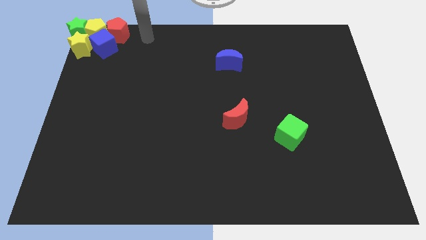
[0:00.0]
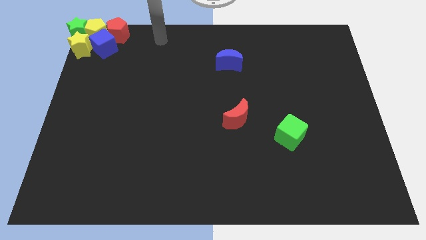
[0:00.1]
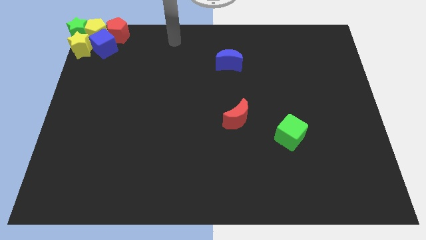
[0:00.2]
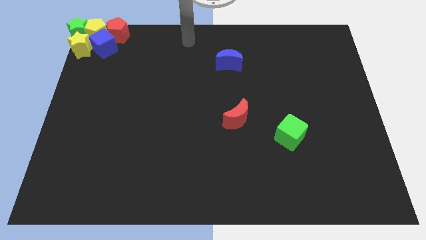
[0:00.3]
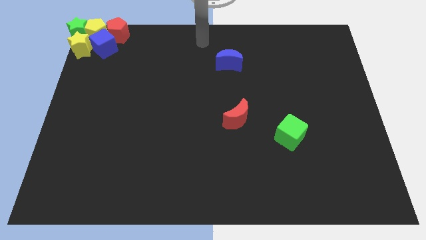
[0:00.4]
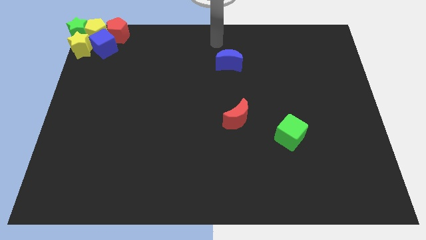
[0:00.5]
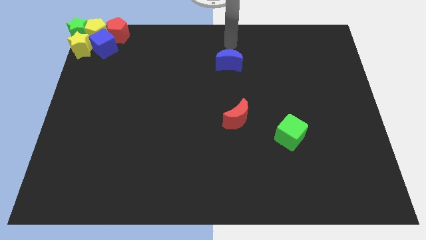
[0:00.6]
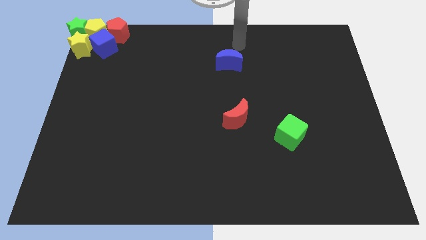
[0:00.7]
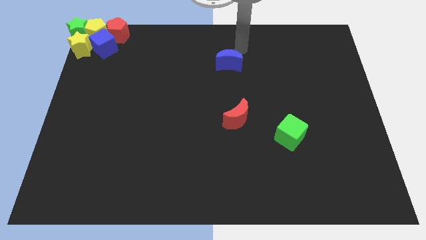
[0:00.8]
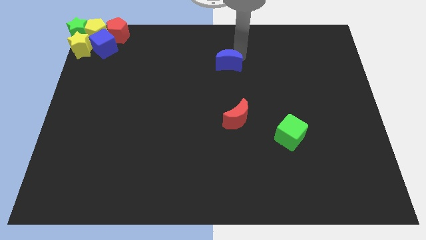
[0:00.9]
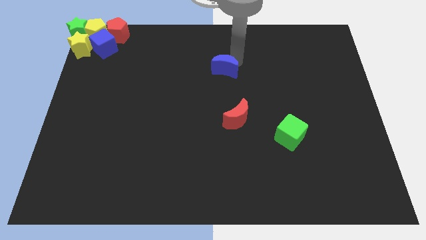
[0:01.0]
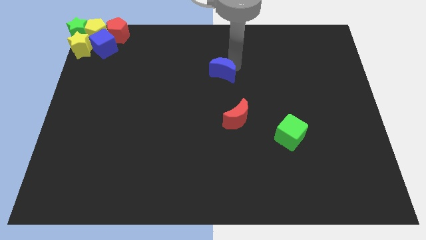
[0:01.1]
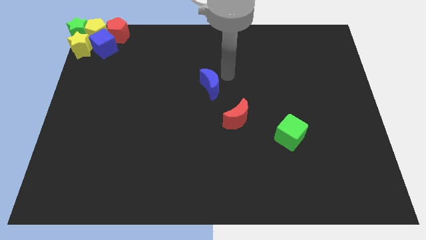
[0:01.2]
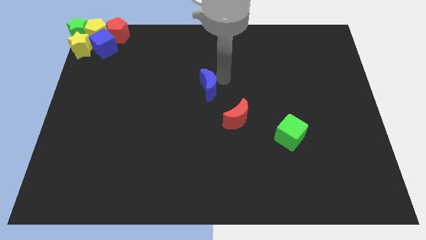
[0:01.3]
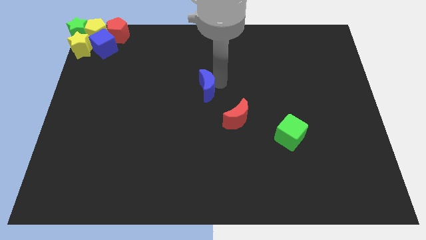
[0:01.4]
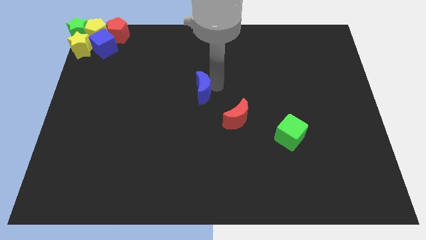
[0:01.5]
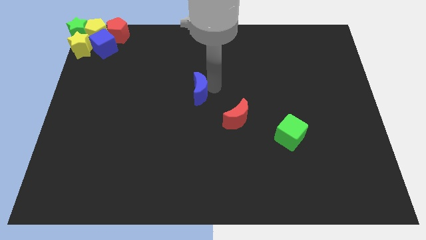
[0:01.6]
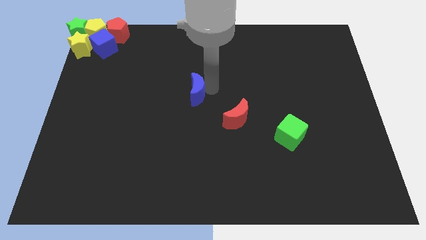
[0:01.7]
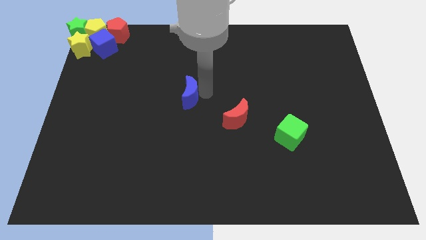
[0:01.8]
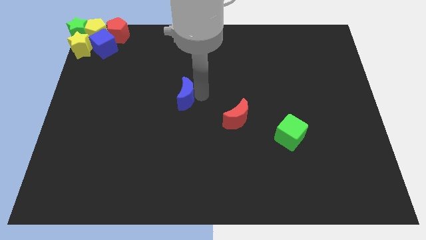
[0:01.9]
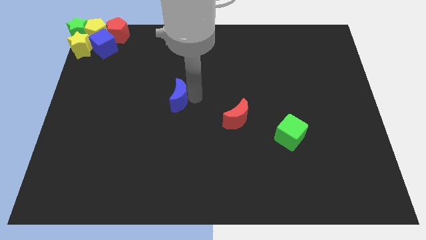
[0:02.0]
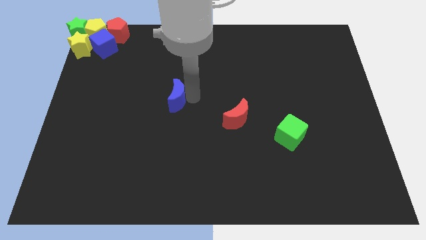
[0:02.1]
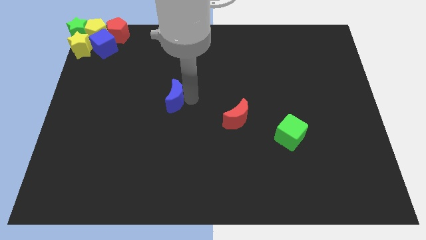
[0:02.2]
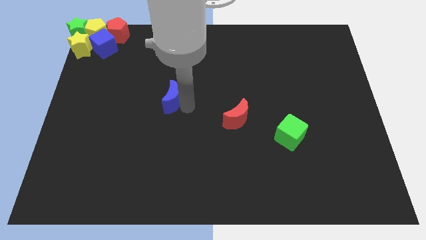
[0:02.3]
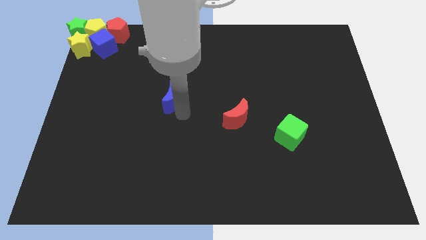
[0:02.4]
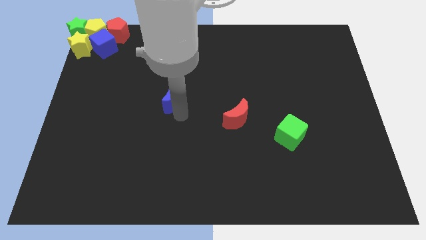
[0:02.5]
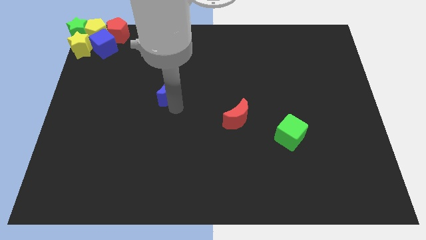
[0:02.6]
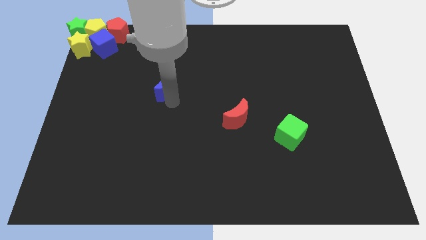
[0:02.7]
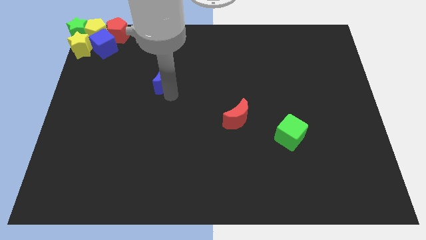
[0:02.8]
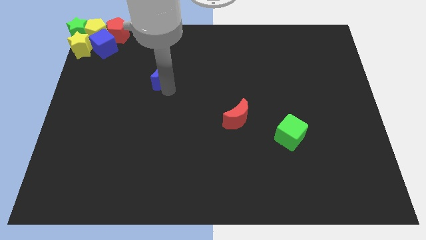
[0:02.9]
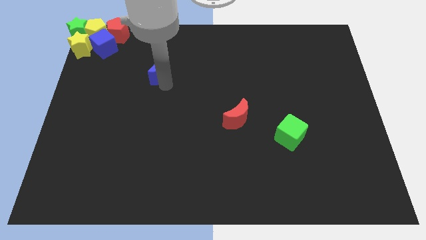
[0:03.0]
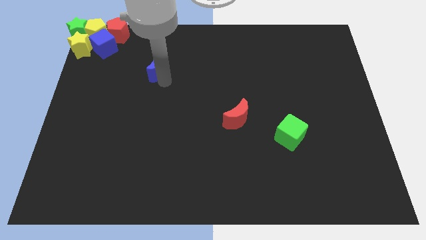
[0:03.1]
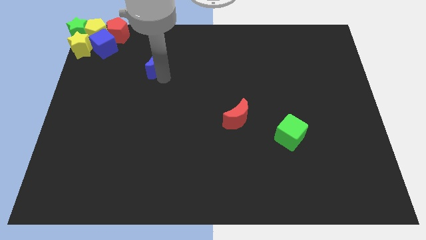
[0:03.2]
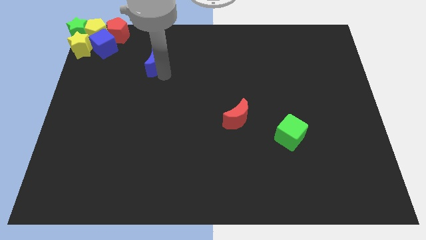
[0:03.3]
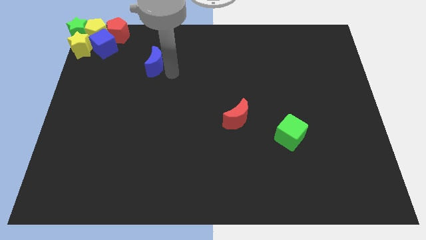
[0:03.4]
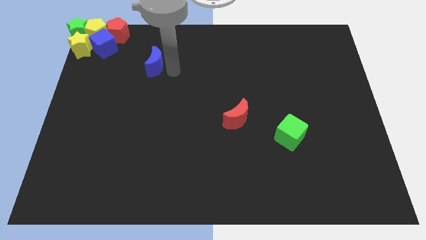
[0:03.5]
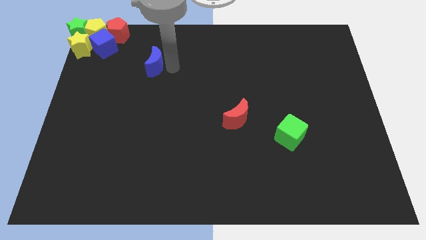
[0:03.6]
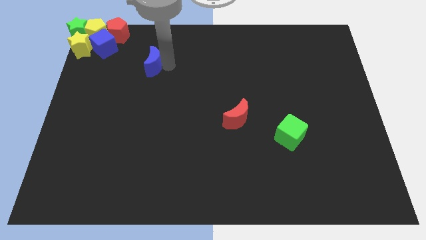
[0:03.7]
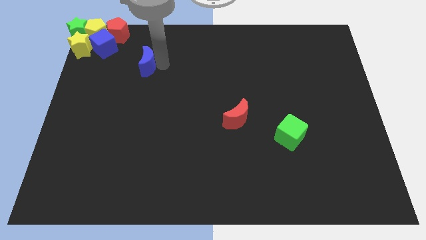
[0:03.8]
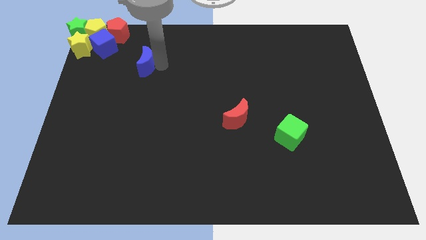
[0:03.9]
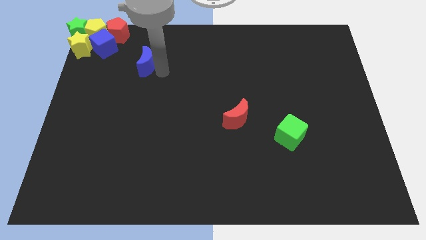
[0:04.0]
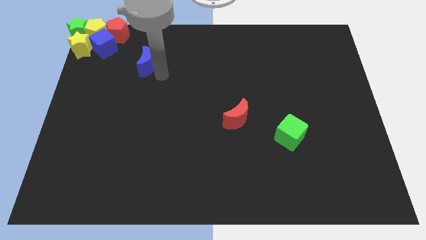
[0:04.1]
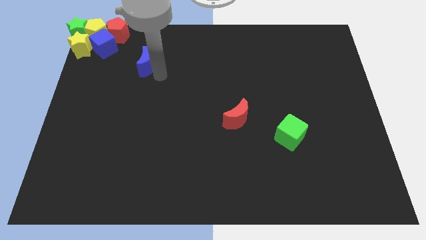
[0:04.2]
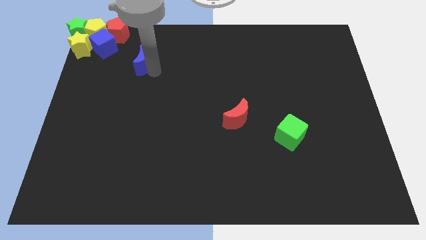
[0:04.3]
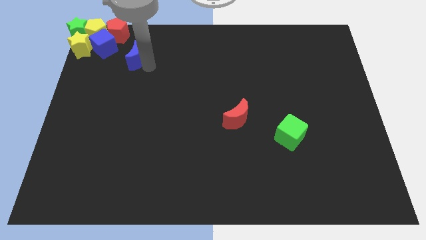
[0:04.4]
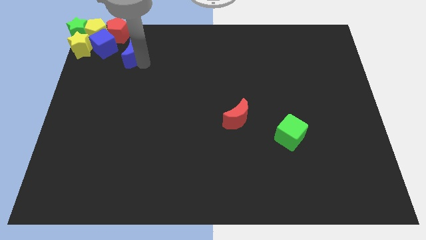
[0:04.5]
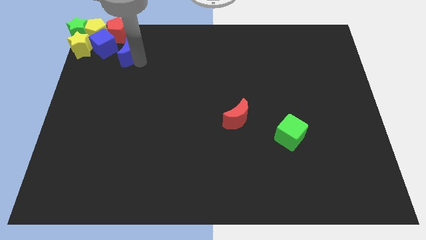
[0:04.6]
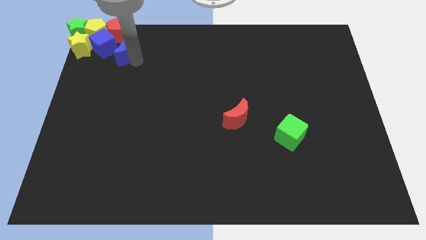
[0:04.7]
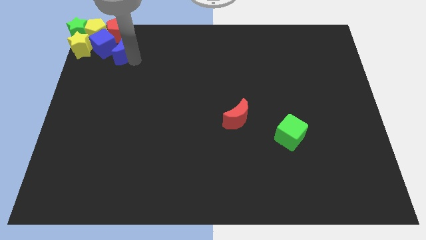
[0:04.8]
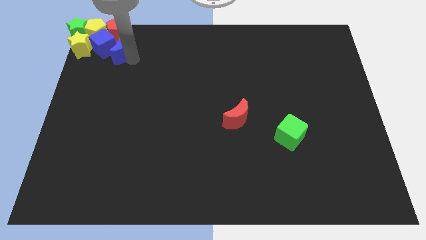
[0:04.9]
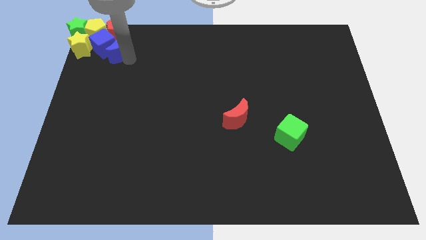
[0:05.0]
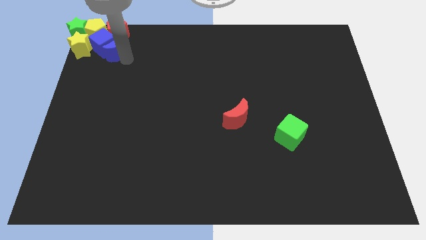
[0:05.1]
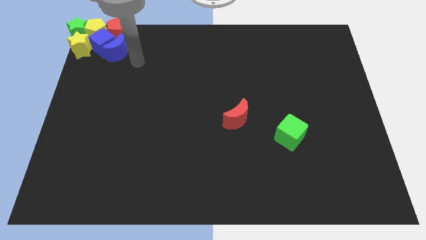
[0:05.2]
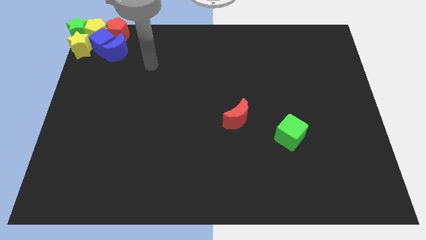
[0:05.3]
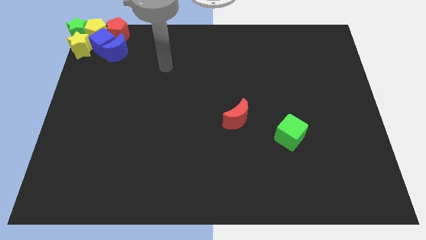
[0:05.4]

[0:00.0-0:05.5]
push the blue crescent into the right side of the blue cube

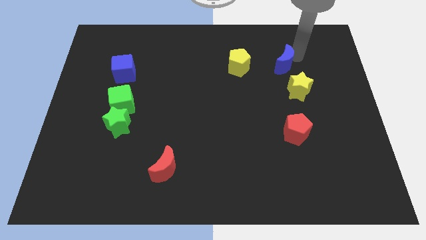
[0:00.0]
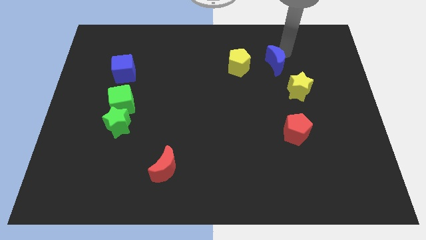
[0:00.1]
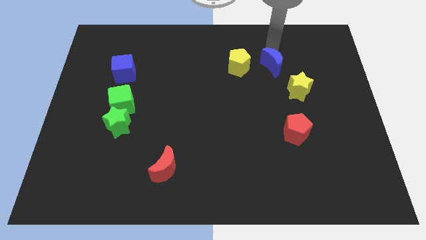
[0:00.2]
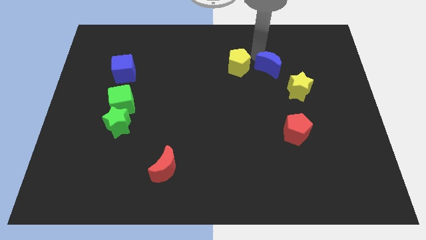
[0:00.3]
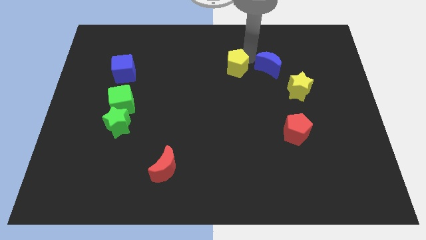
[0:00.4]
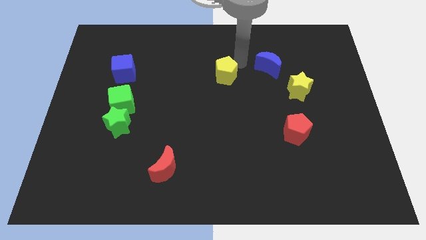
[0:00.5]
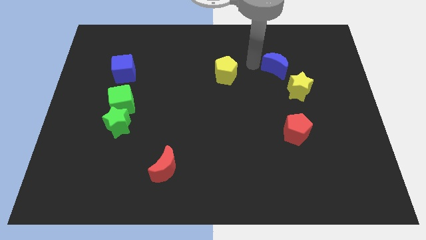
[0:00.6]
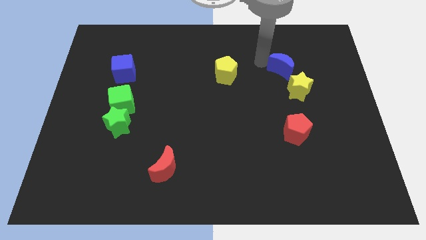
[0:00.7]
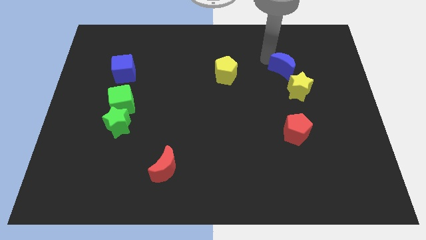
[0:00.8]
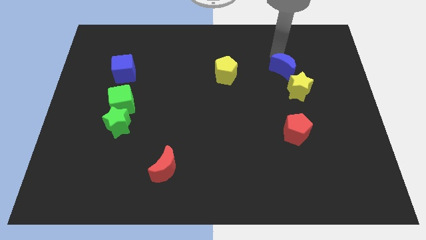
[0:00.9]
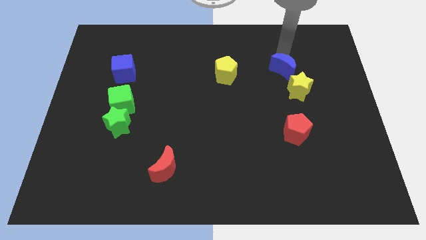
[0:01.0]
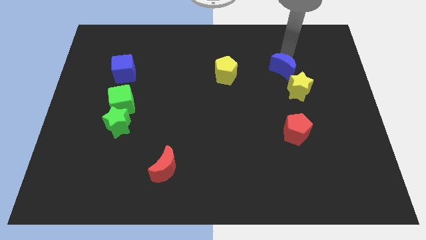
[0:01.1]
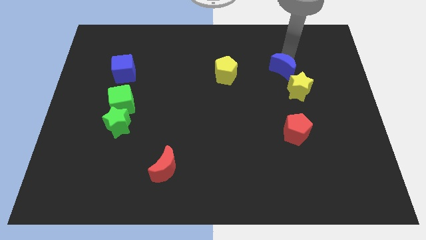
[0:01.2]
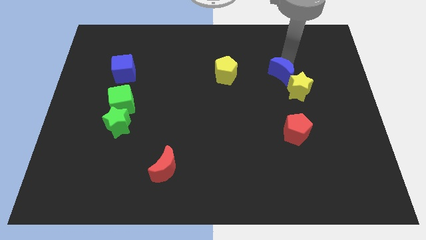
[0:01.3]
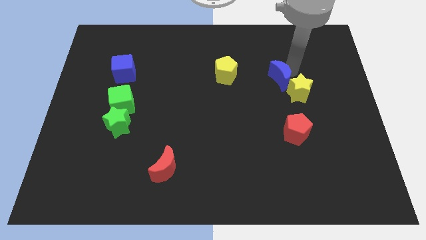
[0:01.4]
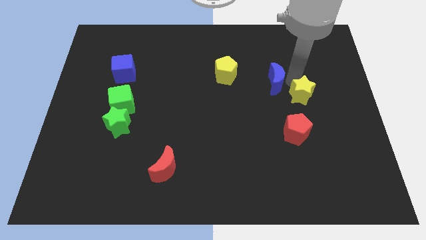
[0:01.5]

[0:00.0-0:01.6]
slightly touch the yellow star with blue crescent

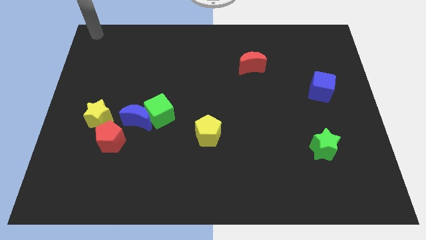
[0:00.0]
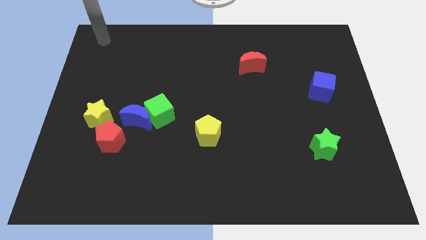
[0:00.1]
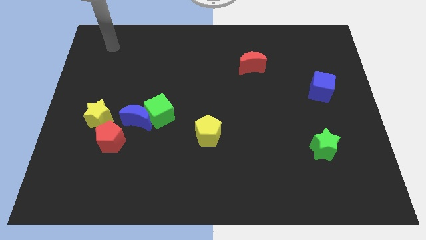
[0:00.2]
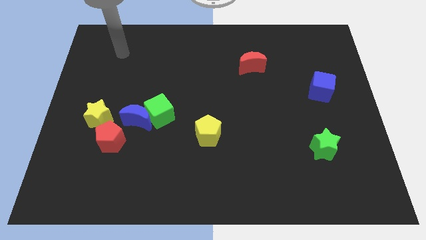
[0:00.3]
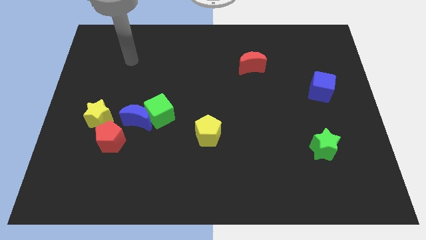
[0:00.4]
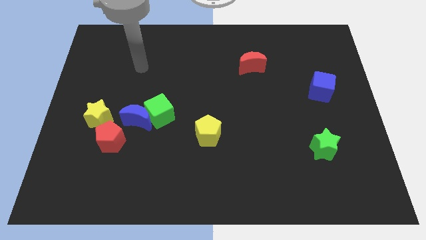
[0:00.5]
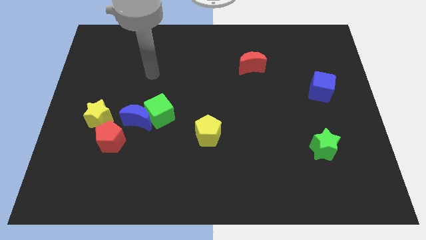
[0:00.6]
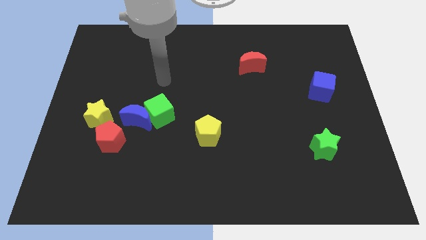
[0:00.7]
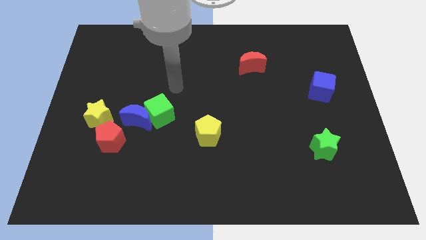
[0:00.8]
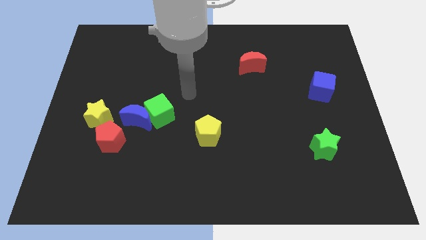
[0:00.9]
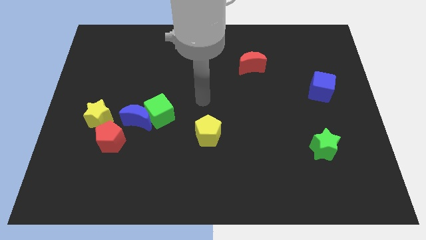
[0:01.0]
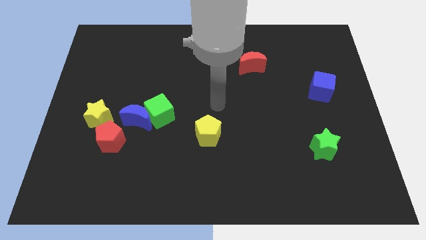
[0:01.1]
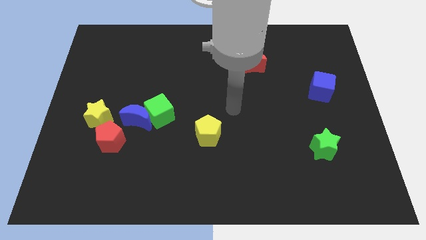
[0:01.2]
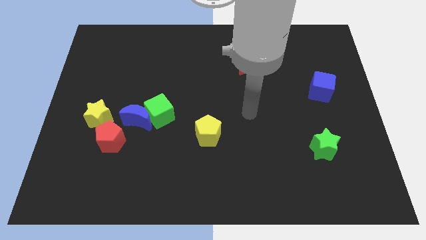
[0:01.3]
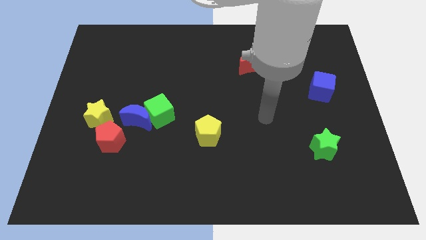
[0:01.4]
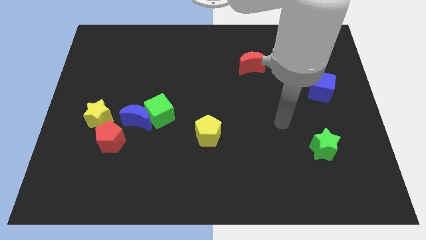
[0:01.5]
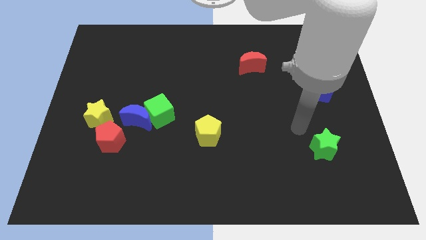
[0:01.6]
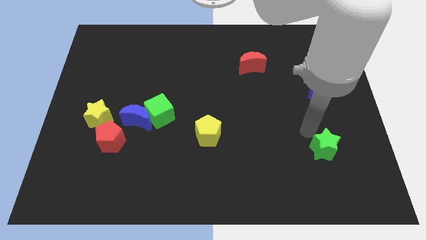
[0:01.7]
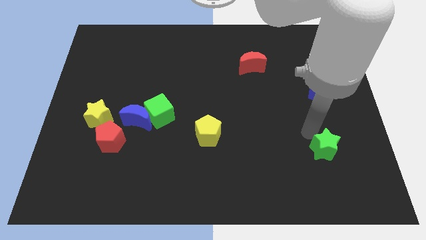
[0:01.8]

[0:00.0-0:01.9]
move your arm near green star

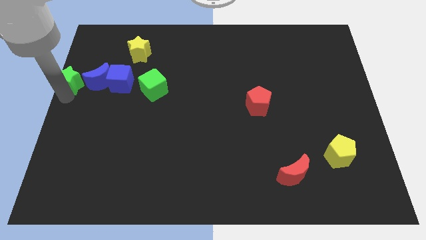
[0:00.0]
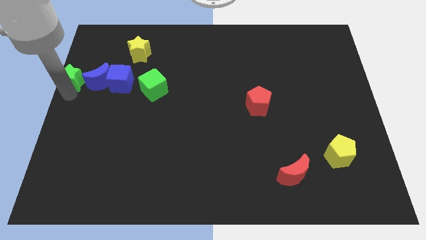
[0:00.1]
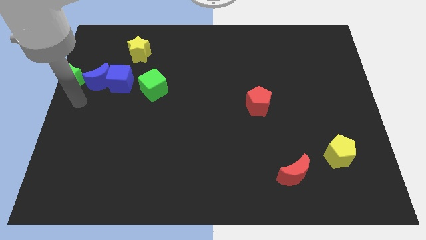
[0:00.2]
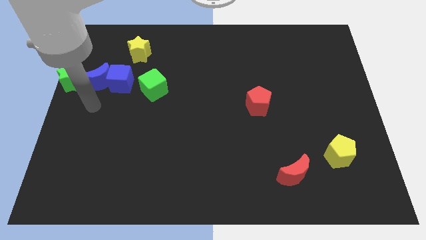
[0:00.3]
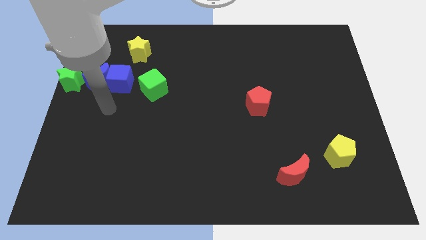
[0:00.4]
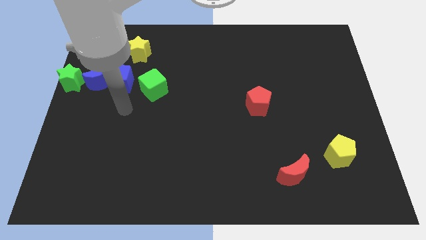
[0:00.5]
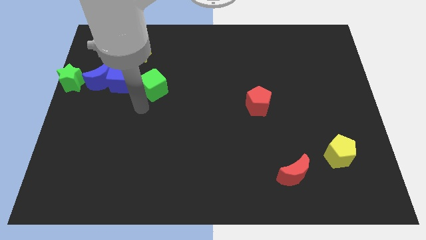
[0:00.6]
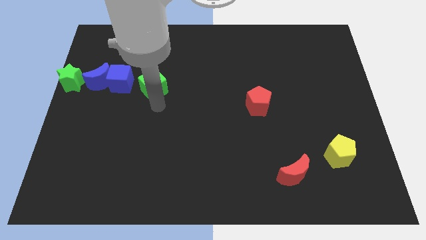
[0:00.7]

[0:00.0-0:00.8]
move your arm away from green star
